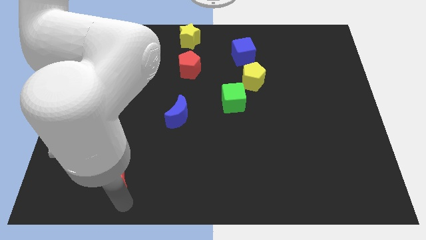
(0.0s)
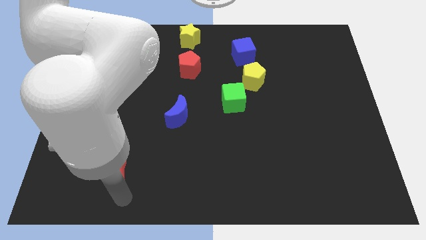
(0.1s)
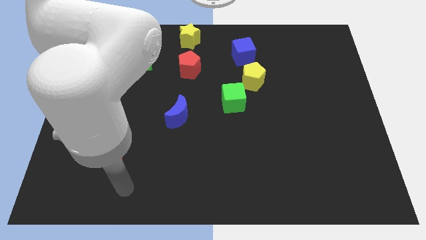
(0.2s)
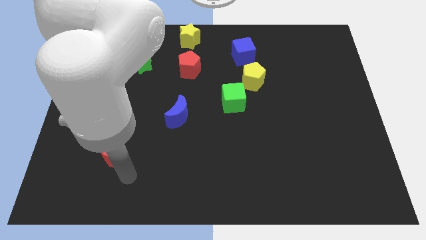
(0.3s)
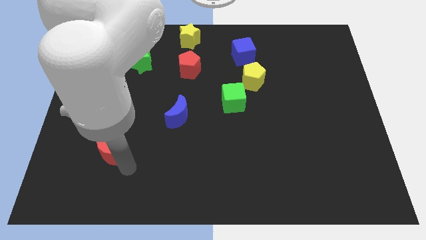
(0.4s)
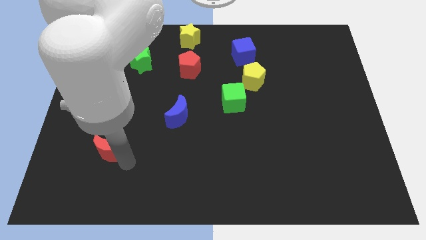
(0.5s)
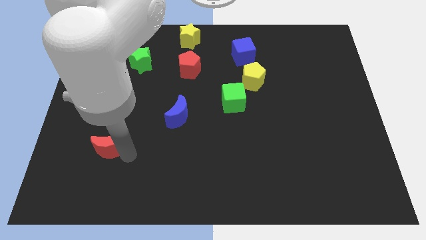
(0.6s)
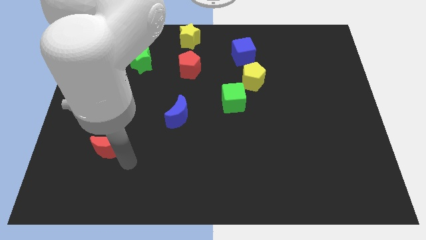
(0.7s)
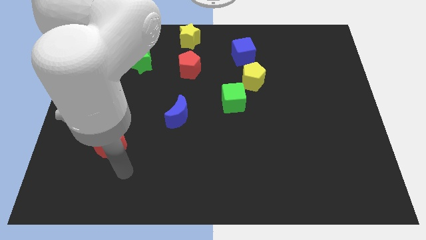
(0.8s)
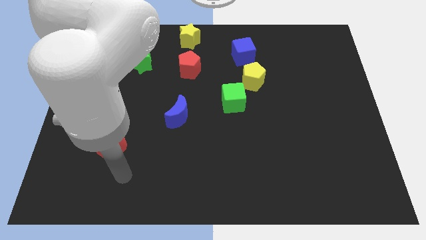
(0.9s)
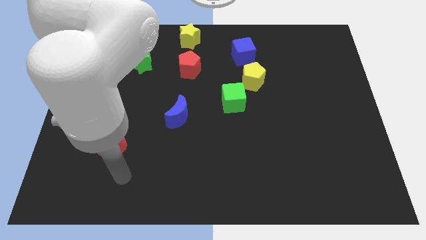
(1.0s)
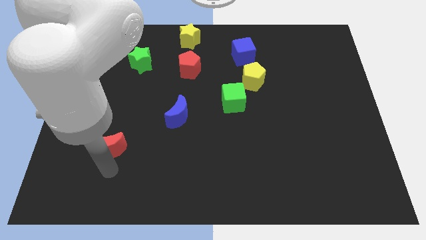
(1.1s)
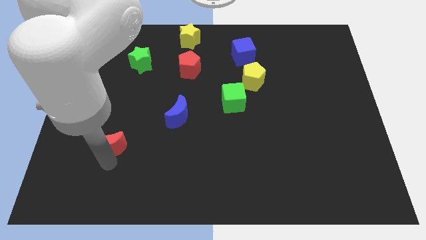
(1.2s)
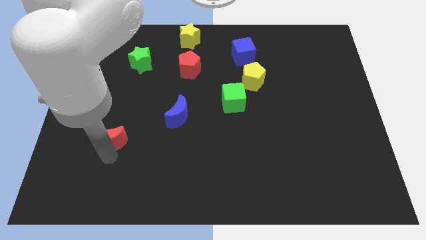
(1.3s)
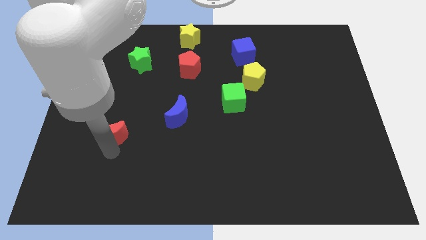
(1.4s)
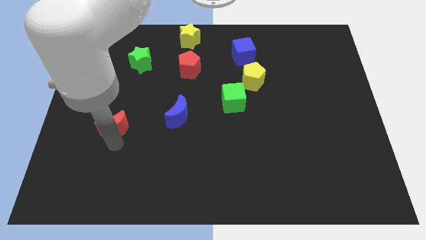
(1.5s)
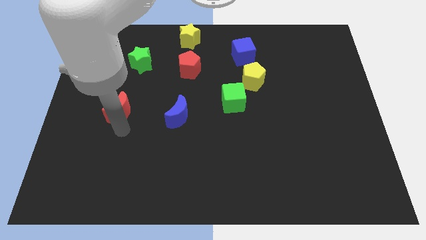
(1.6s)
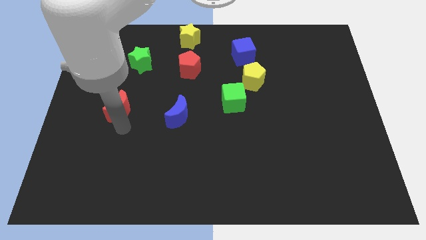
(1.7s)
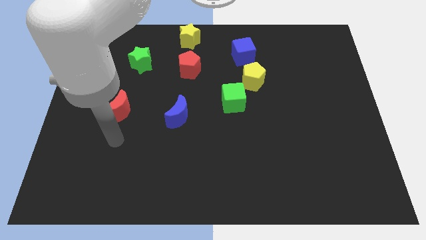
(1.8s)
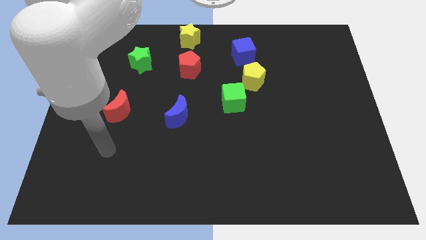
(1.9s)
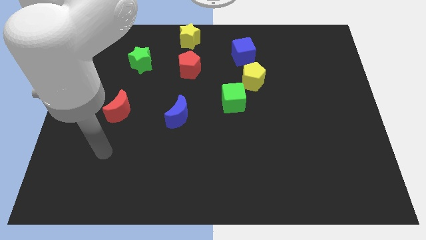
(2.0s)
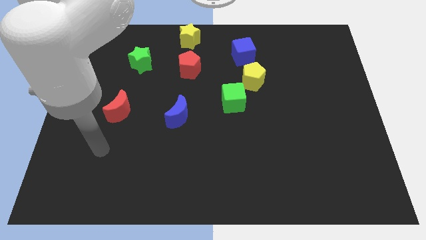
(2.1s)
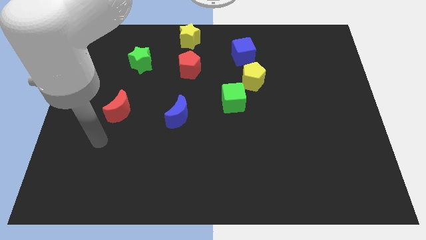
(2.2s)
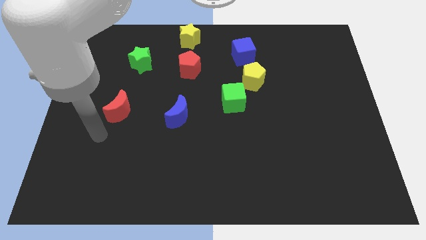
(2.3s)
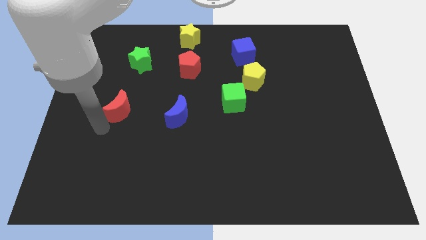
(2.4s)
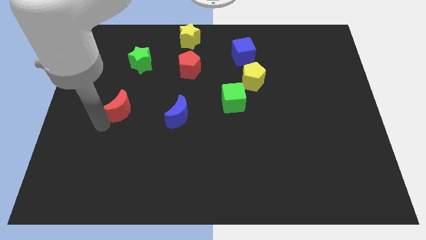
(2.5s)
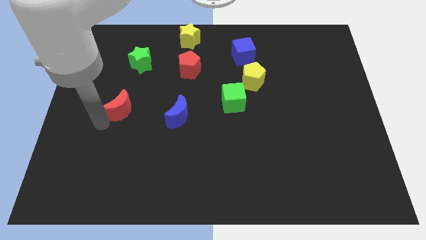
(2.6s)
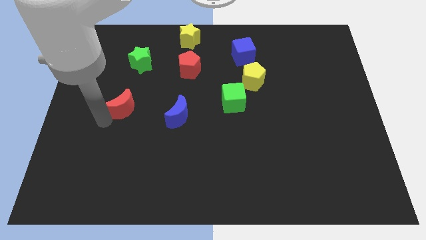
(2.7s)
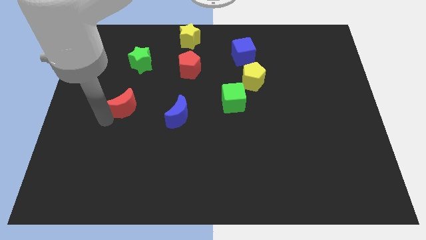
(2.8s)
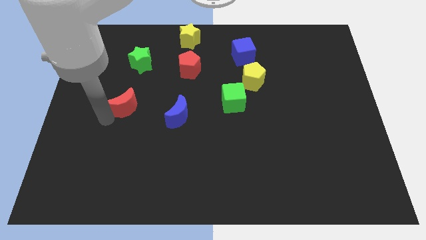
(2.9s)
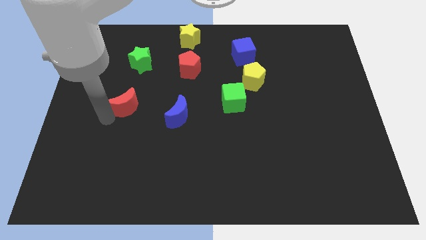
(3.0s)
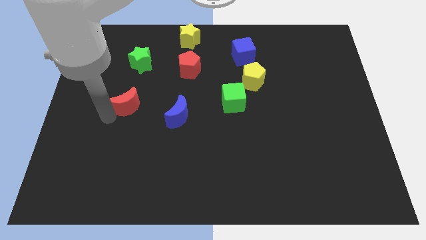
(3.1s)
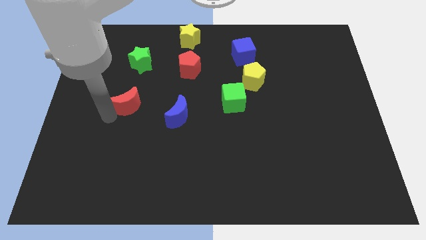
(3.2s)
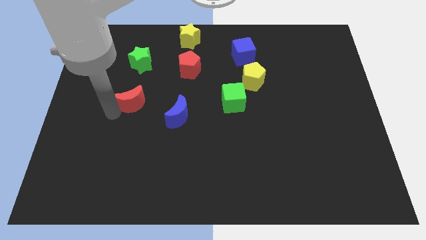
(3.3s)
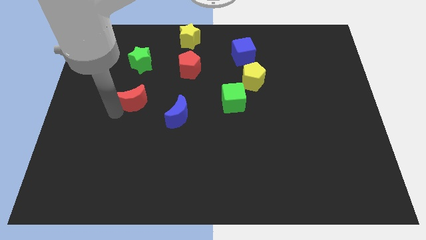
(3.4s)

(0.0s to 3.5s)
place the red crescent below the green star

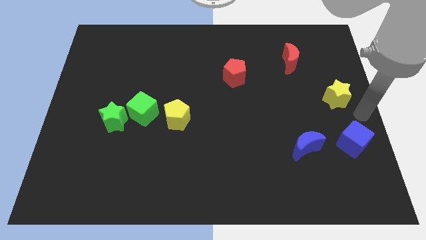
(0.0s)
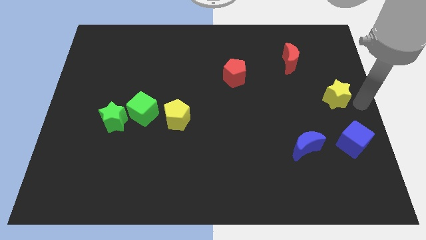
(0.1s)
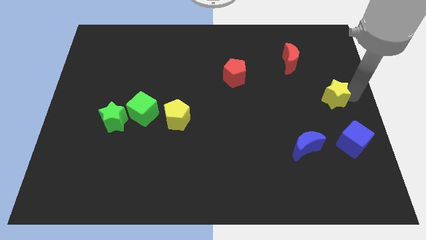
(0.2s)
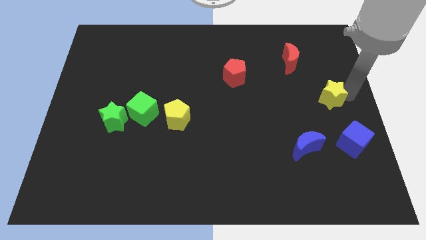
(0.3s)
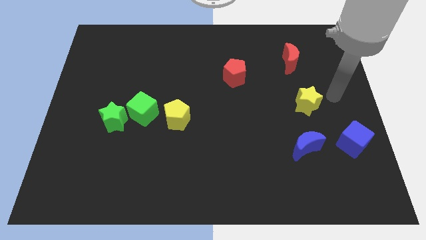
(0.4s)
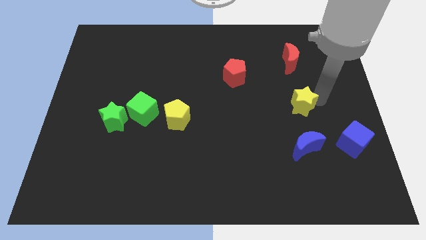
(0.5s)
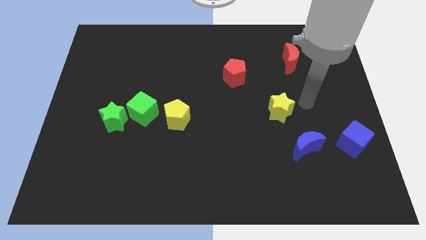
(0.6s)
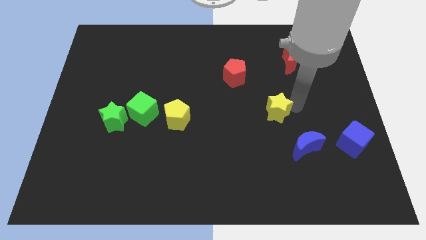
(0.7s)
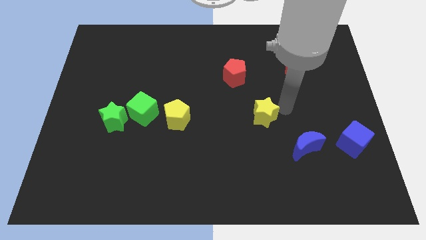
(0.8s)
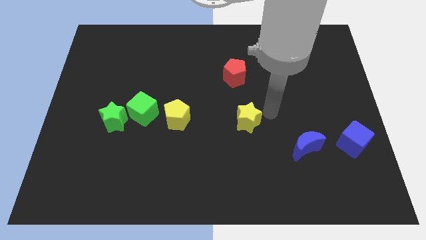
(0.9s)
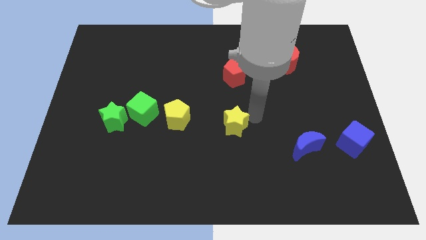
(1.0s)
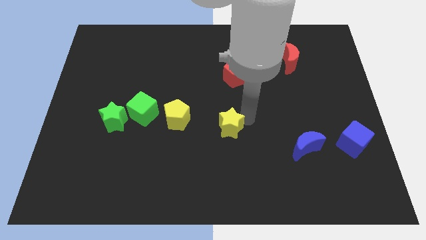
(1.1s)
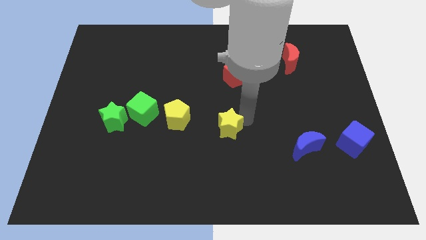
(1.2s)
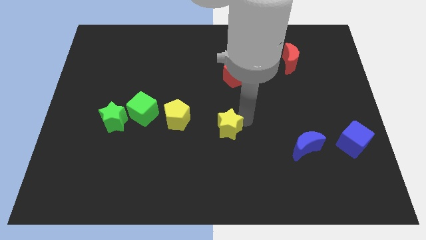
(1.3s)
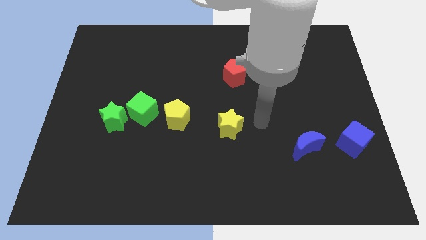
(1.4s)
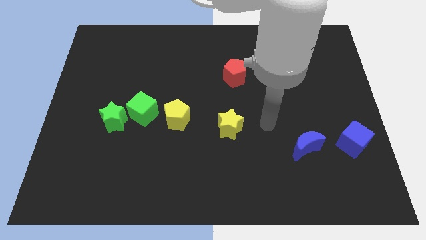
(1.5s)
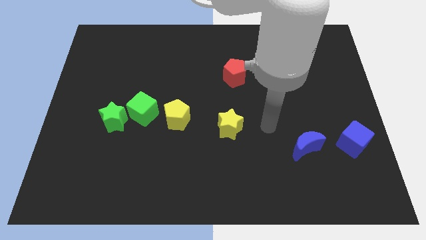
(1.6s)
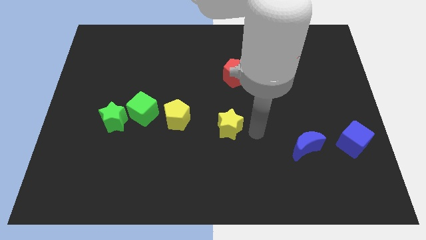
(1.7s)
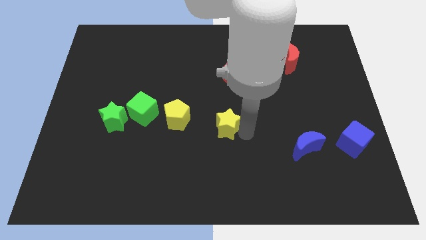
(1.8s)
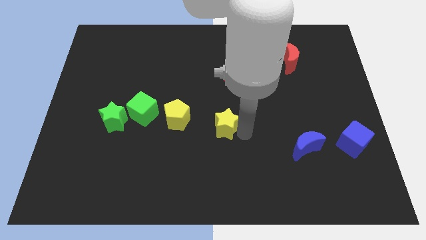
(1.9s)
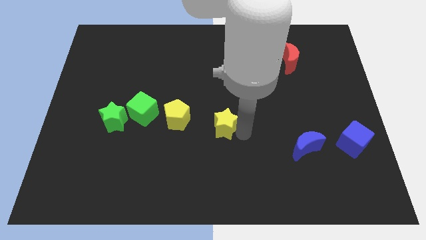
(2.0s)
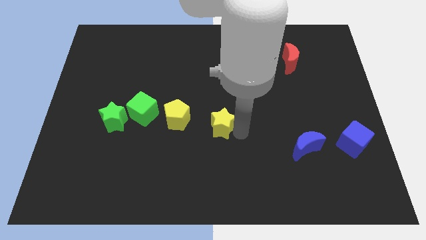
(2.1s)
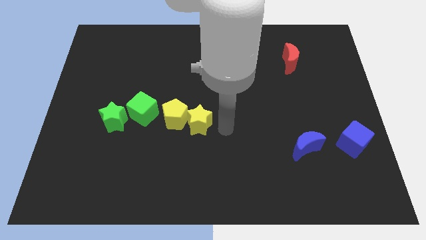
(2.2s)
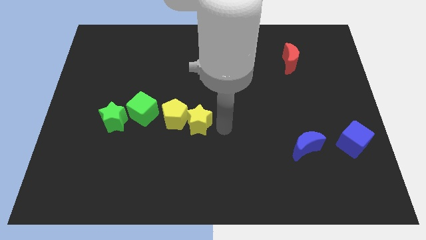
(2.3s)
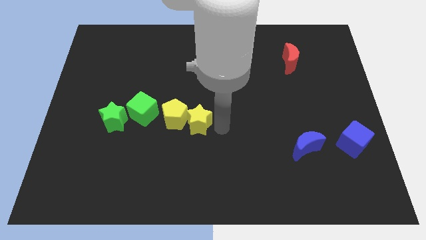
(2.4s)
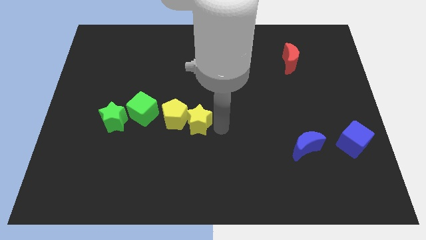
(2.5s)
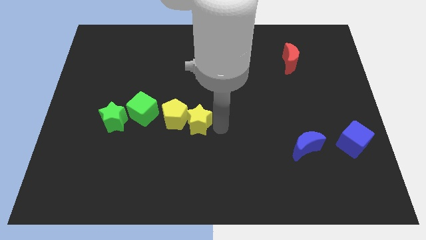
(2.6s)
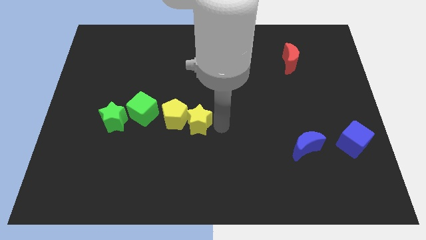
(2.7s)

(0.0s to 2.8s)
move yellow star into yellow pentagon

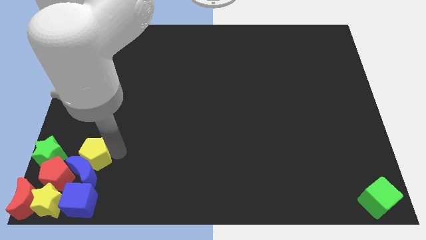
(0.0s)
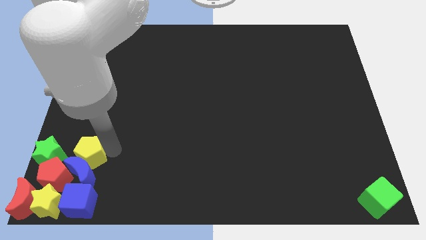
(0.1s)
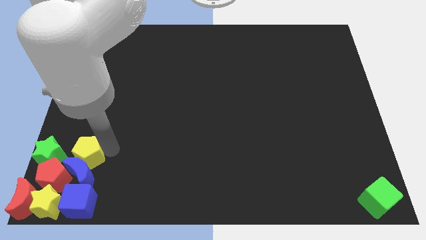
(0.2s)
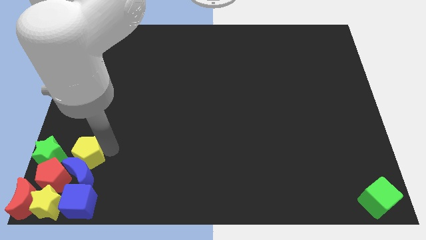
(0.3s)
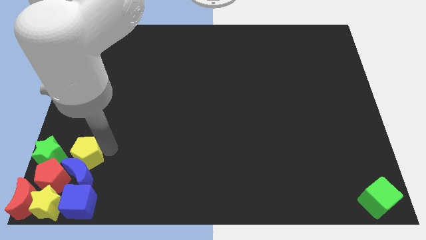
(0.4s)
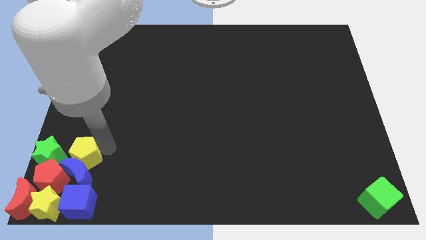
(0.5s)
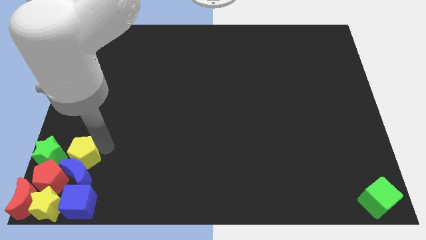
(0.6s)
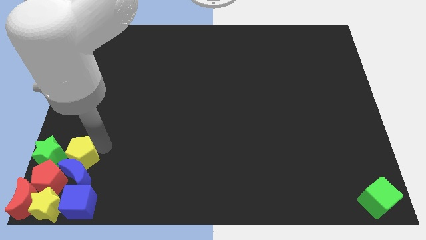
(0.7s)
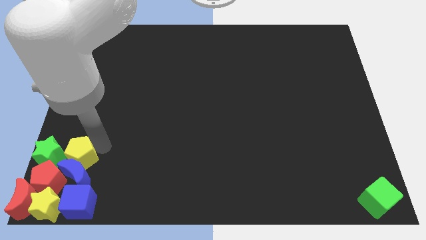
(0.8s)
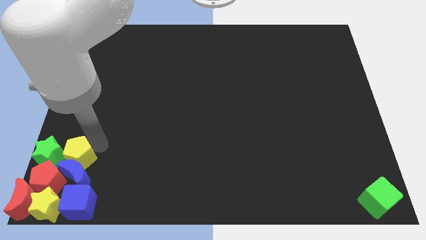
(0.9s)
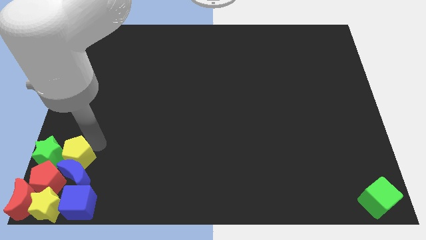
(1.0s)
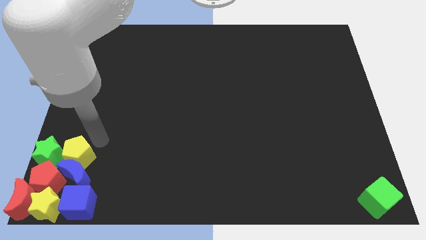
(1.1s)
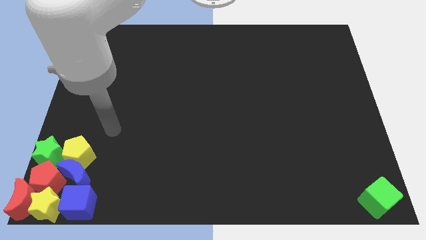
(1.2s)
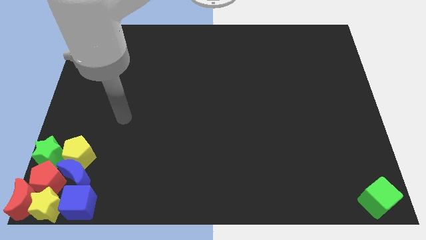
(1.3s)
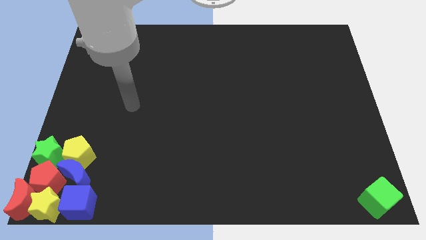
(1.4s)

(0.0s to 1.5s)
place the yellow pentagon in align with the green star

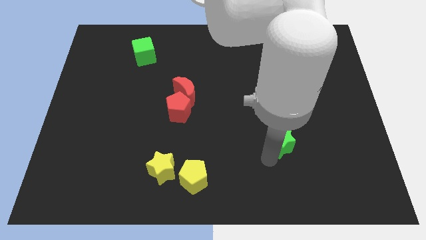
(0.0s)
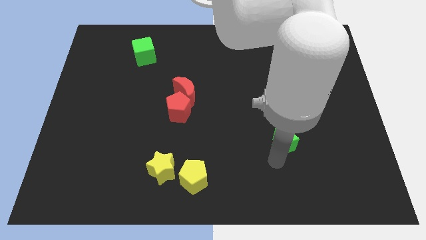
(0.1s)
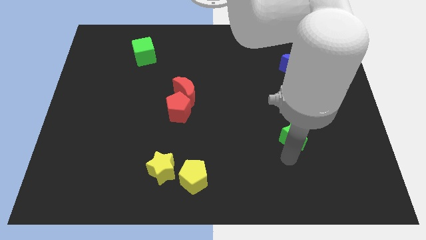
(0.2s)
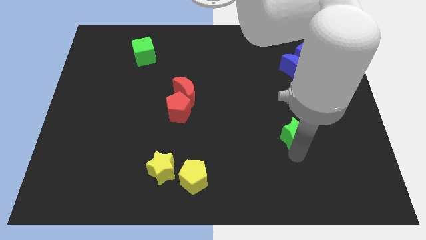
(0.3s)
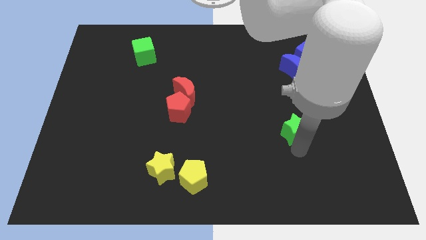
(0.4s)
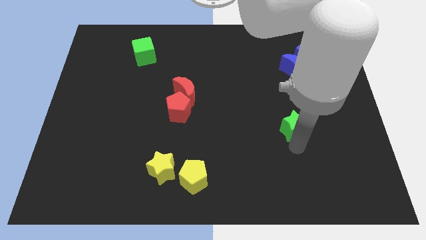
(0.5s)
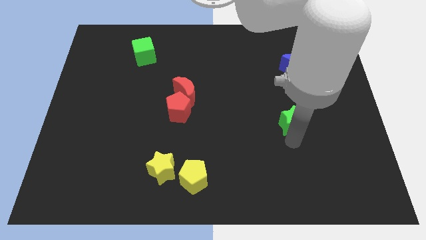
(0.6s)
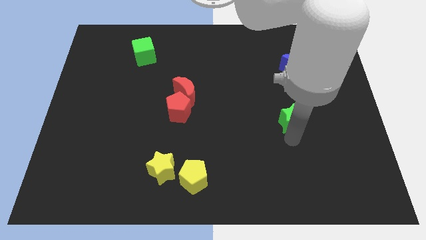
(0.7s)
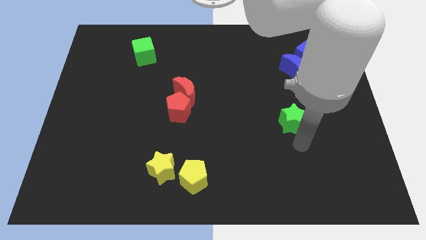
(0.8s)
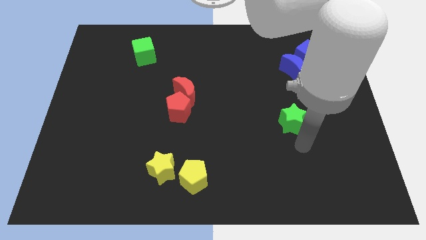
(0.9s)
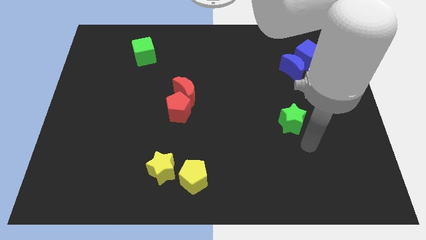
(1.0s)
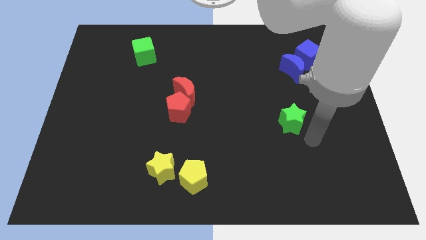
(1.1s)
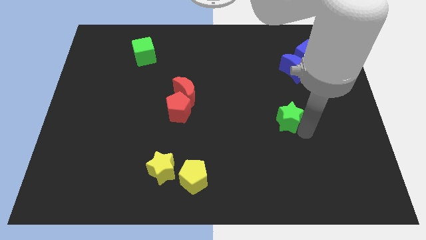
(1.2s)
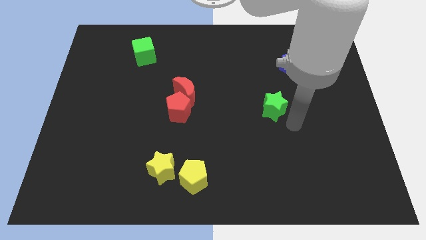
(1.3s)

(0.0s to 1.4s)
slightly move the green star
